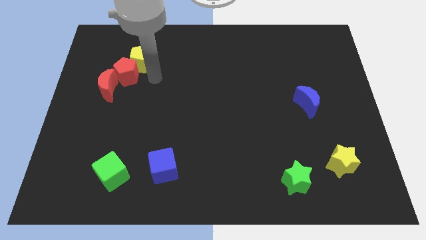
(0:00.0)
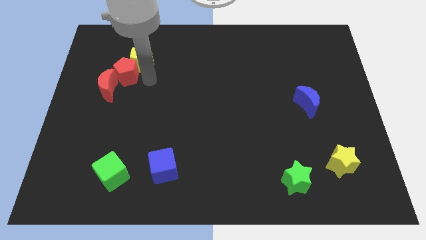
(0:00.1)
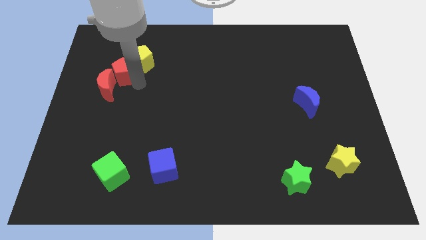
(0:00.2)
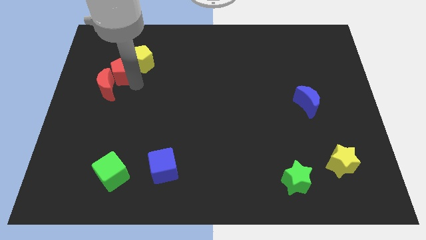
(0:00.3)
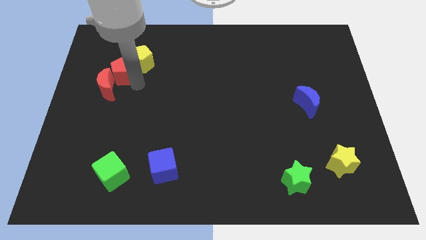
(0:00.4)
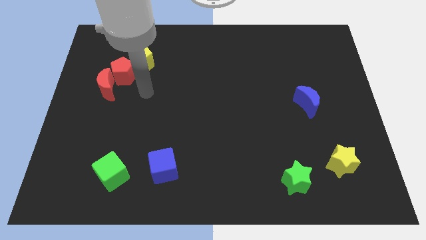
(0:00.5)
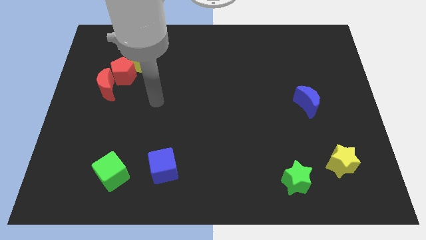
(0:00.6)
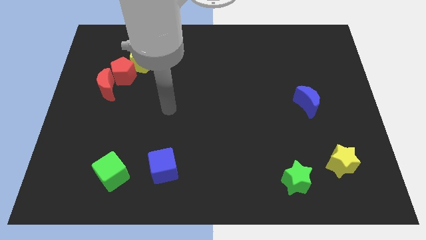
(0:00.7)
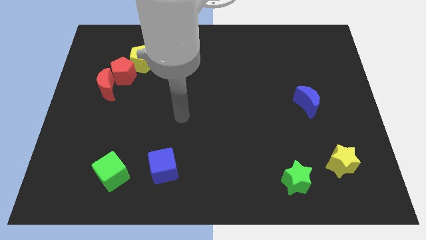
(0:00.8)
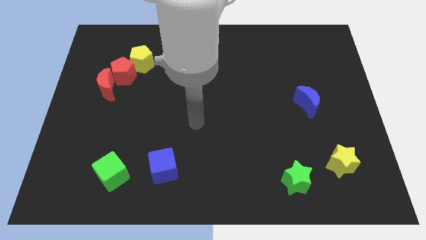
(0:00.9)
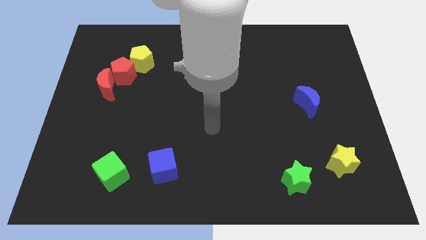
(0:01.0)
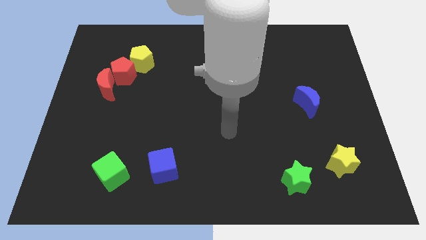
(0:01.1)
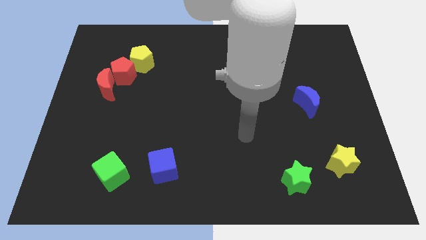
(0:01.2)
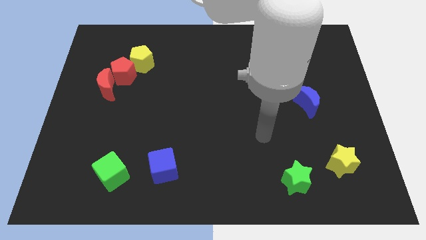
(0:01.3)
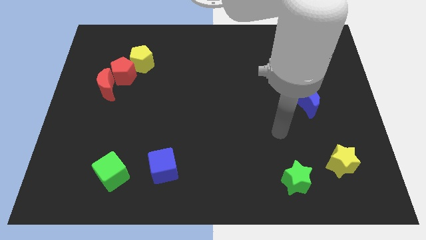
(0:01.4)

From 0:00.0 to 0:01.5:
slightly push the red pentagon to the left of the board

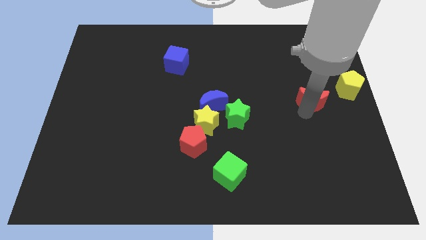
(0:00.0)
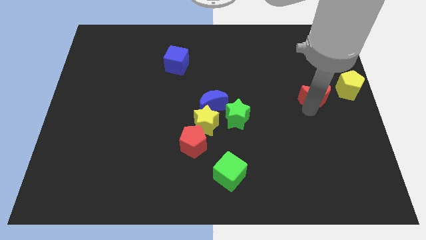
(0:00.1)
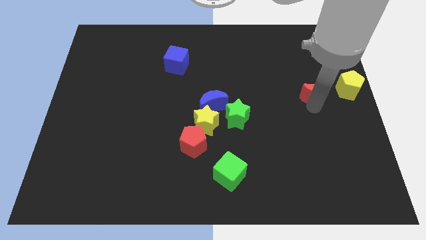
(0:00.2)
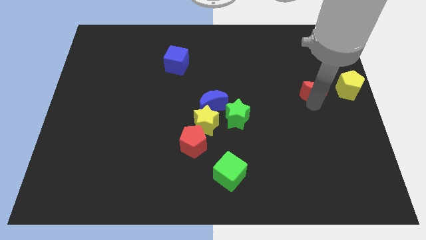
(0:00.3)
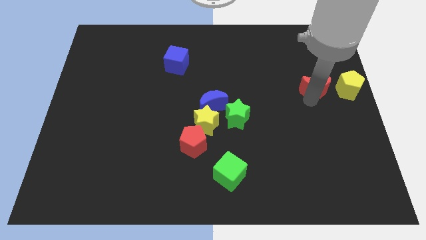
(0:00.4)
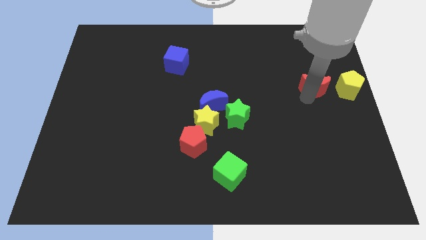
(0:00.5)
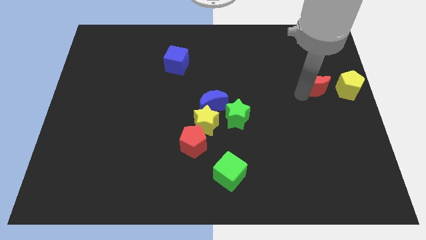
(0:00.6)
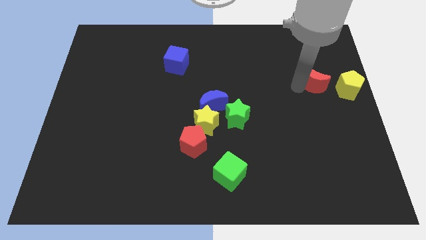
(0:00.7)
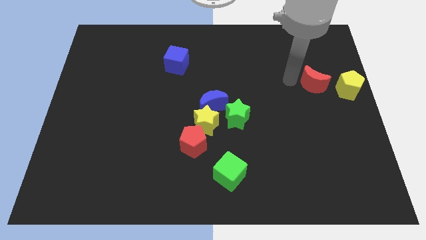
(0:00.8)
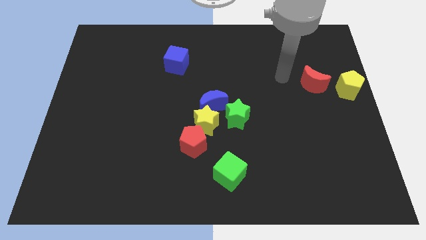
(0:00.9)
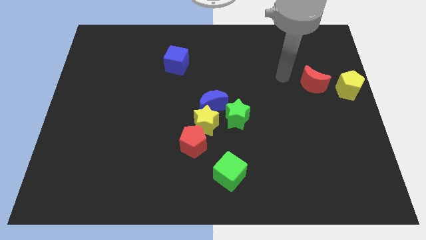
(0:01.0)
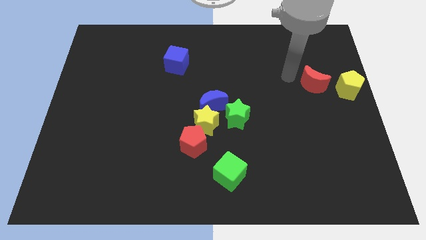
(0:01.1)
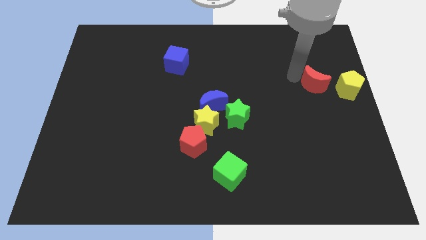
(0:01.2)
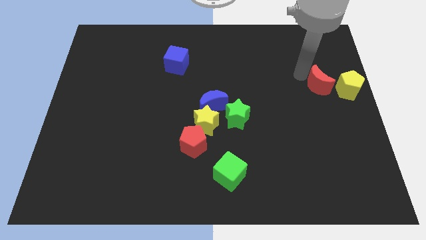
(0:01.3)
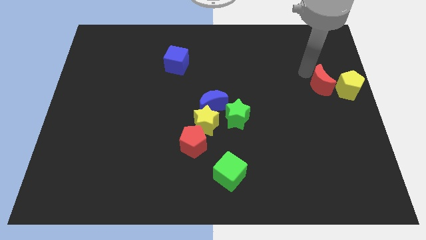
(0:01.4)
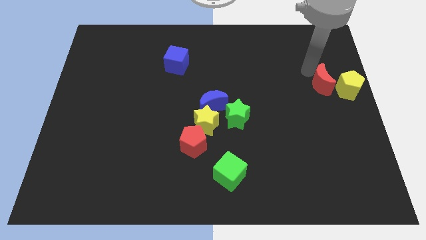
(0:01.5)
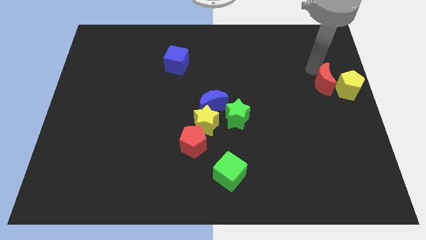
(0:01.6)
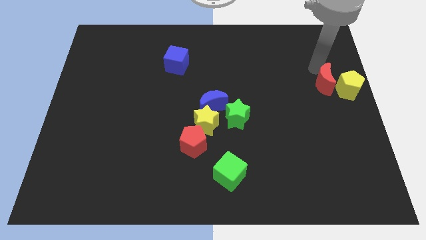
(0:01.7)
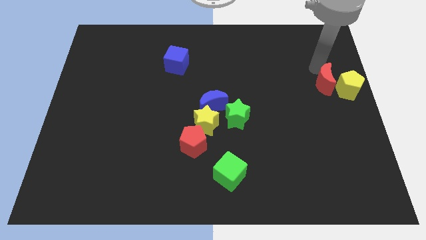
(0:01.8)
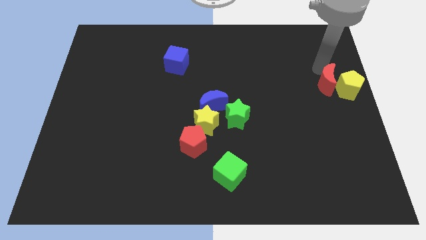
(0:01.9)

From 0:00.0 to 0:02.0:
push the red crescent into yellow pentagon

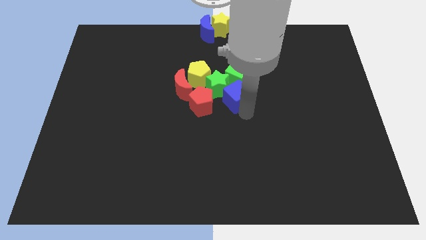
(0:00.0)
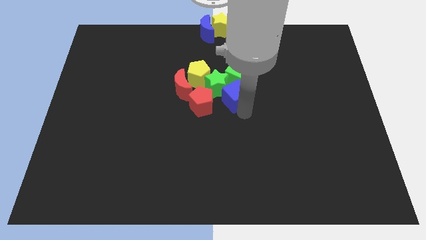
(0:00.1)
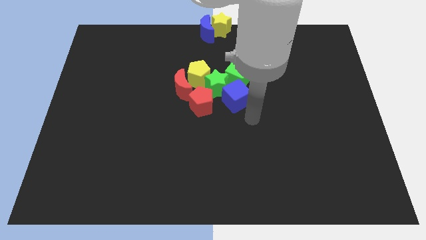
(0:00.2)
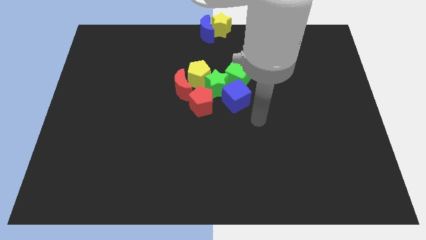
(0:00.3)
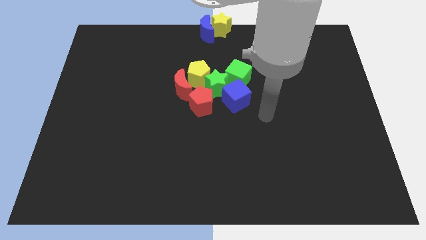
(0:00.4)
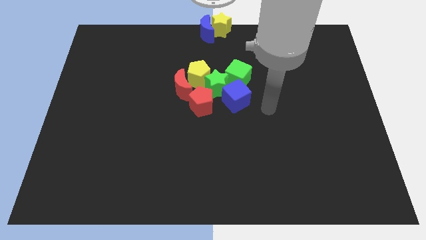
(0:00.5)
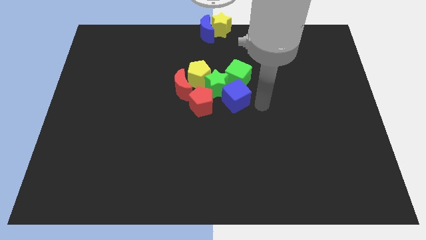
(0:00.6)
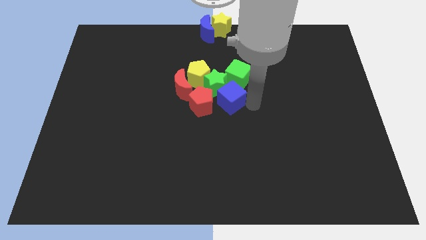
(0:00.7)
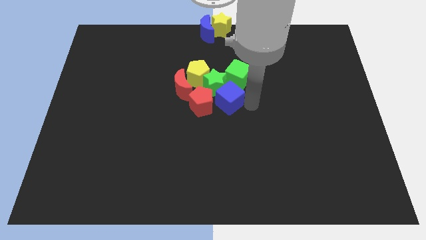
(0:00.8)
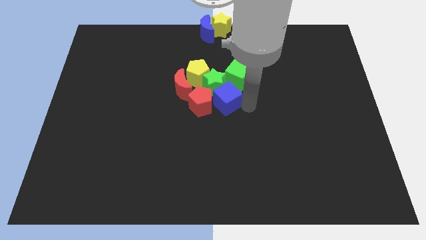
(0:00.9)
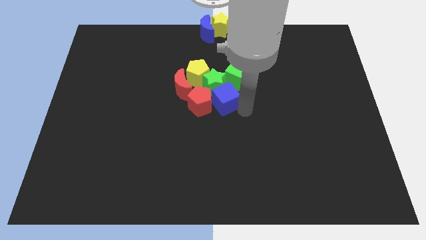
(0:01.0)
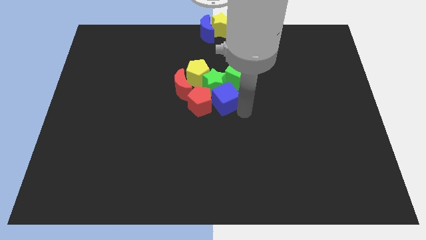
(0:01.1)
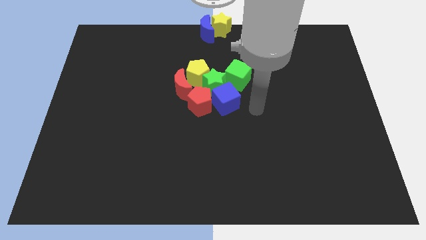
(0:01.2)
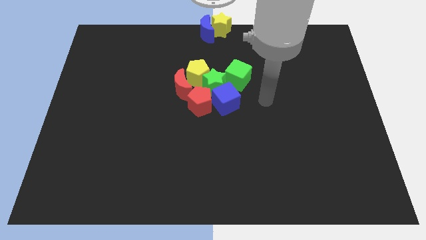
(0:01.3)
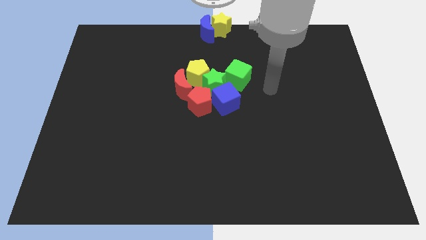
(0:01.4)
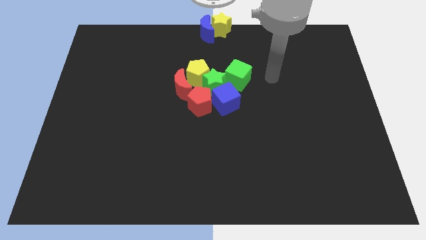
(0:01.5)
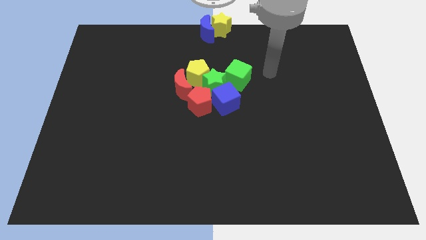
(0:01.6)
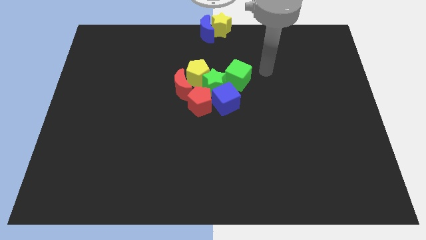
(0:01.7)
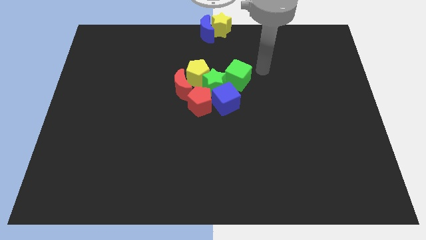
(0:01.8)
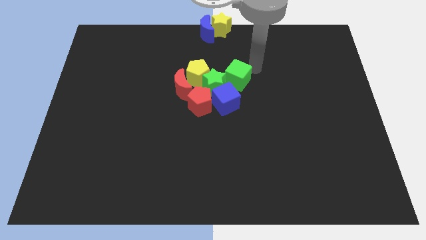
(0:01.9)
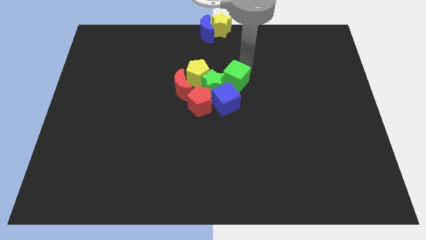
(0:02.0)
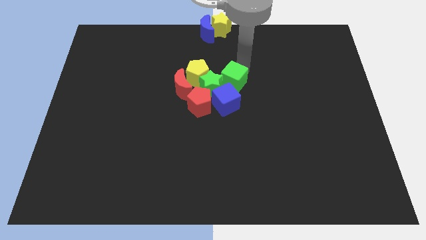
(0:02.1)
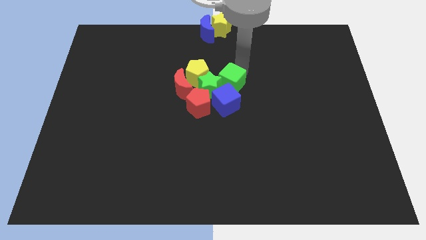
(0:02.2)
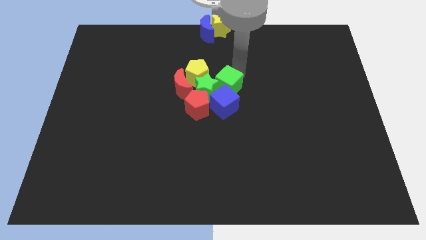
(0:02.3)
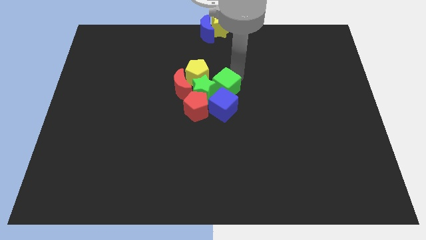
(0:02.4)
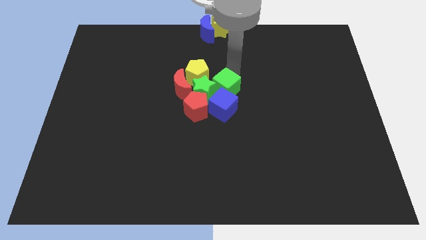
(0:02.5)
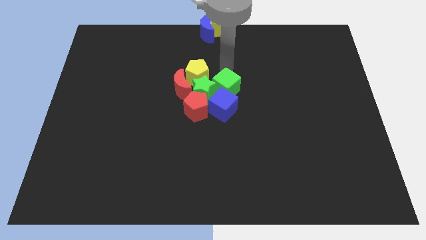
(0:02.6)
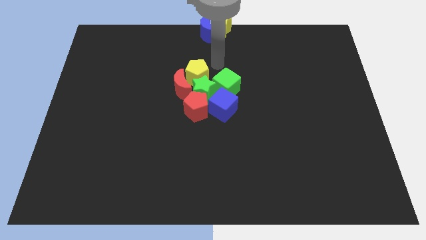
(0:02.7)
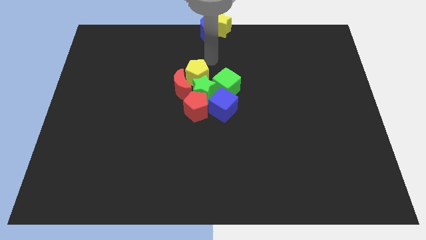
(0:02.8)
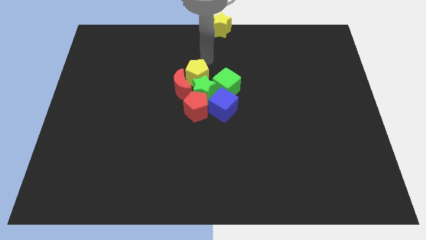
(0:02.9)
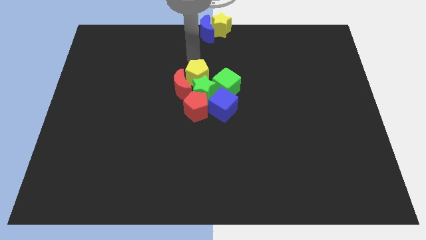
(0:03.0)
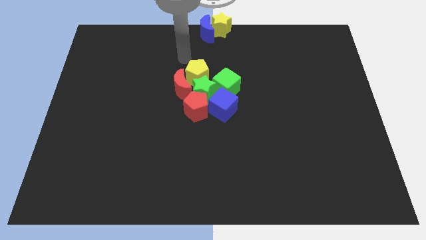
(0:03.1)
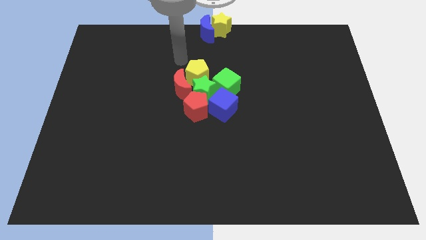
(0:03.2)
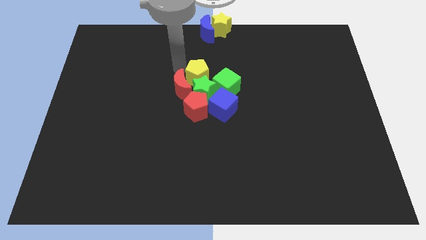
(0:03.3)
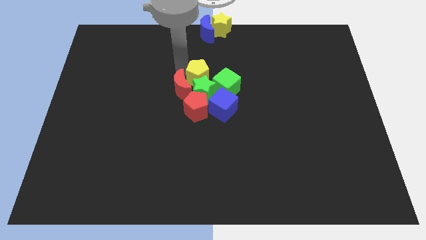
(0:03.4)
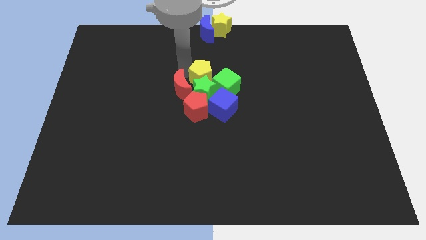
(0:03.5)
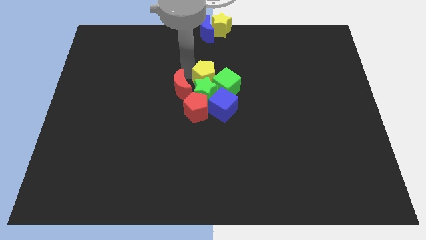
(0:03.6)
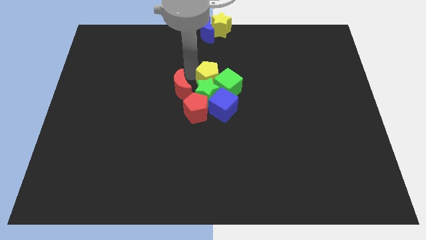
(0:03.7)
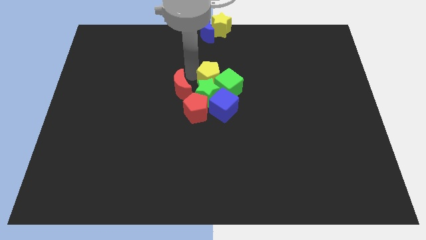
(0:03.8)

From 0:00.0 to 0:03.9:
push the blue cube green cube and yellow pentagon into the green star

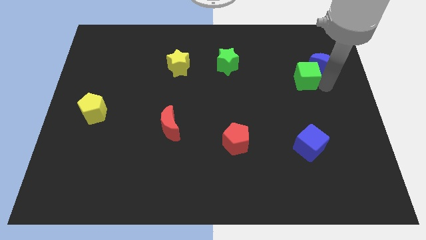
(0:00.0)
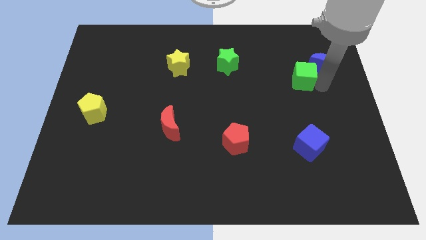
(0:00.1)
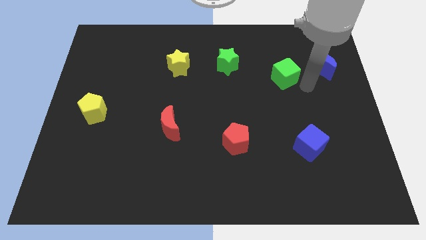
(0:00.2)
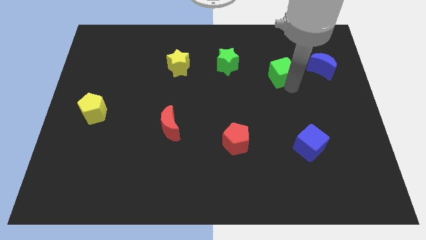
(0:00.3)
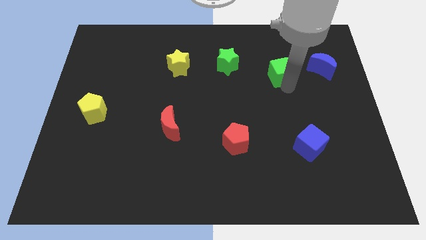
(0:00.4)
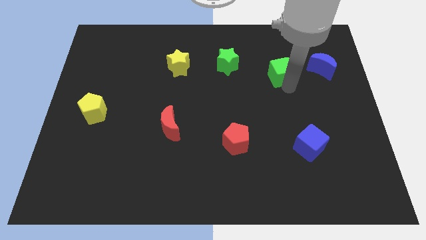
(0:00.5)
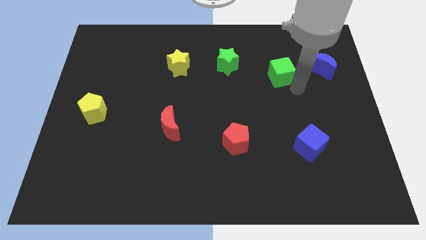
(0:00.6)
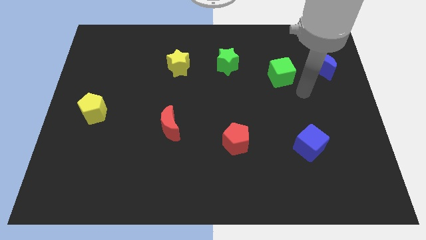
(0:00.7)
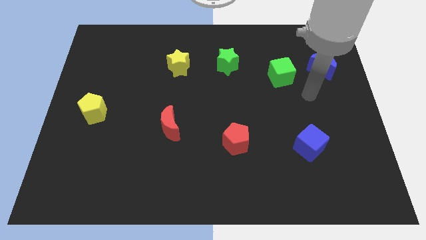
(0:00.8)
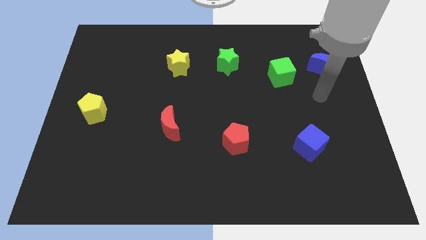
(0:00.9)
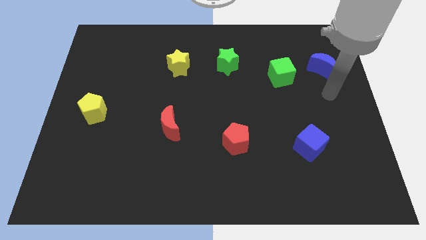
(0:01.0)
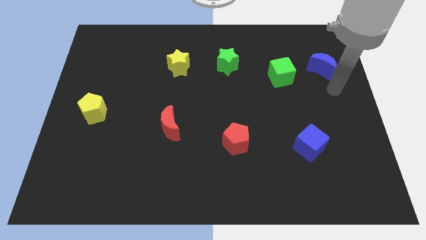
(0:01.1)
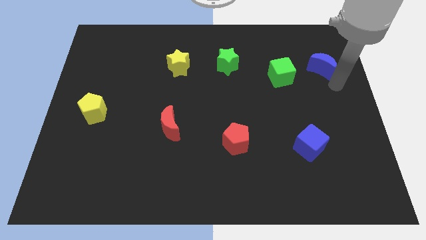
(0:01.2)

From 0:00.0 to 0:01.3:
put green cube in between green star and blue moon

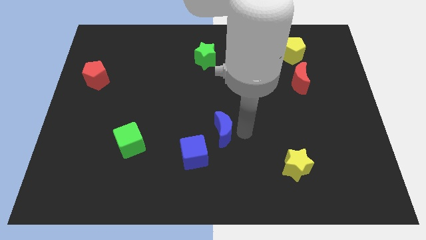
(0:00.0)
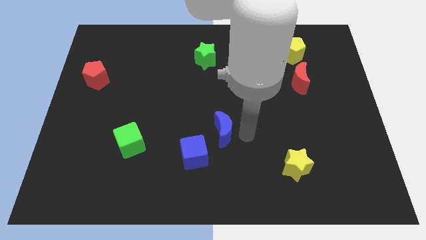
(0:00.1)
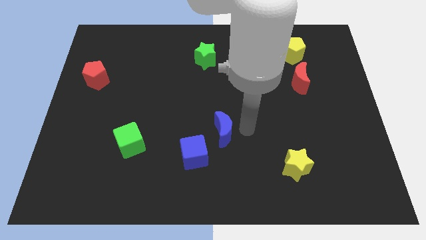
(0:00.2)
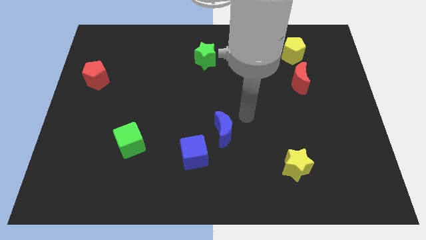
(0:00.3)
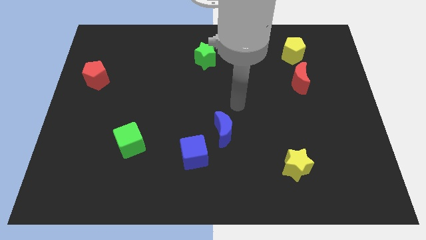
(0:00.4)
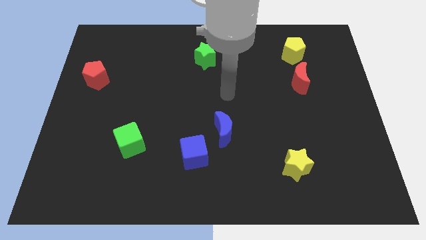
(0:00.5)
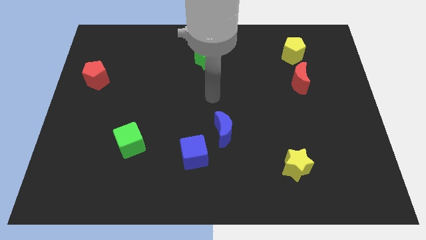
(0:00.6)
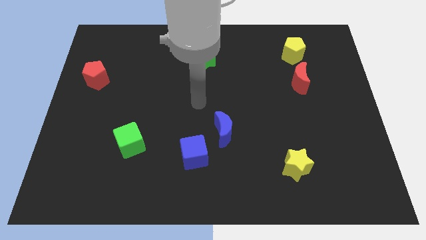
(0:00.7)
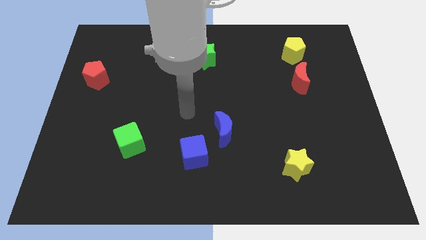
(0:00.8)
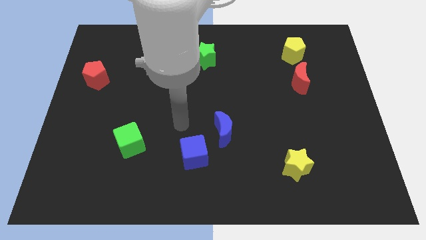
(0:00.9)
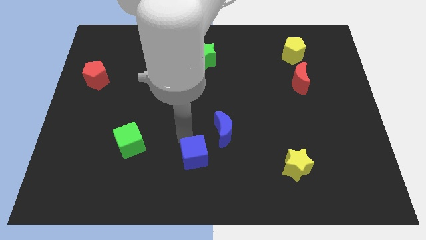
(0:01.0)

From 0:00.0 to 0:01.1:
move the arm to the top side of the blue cube
